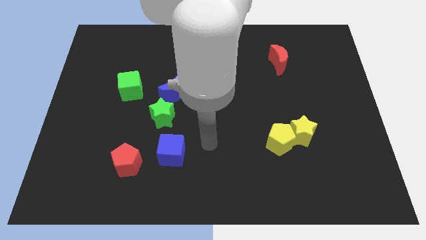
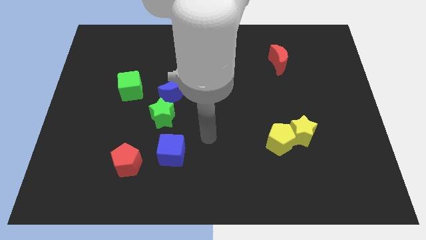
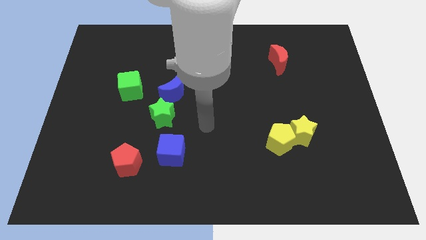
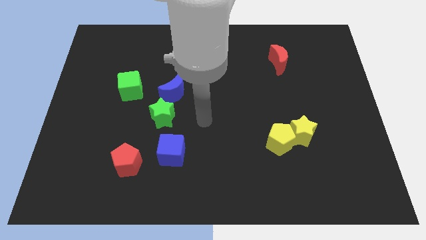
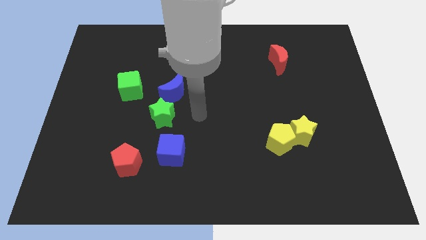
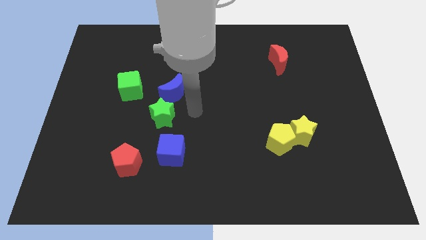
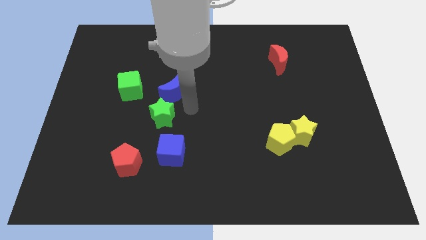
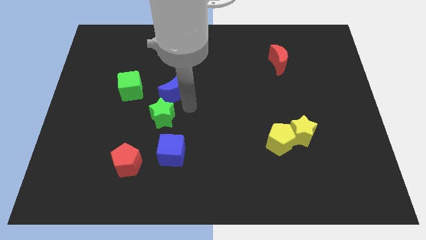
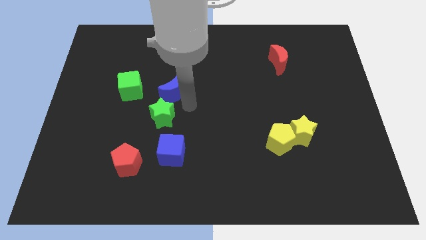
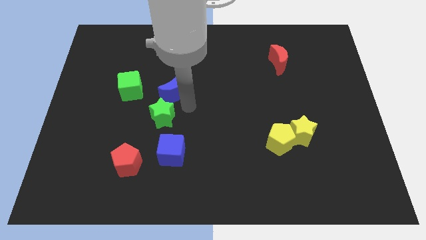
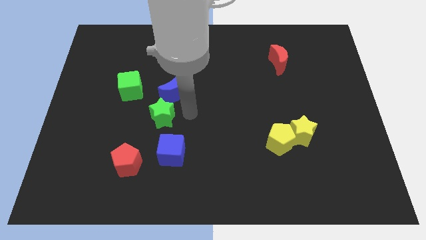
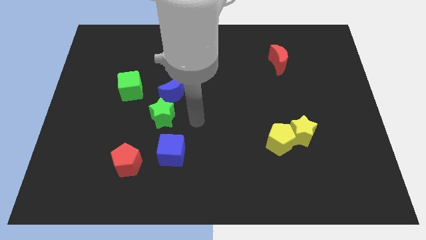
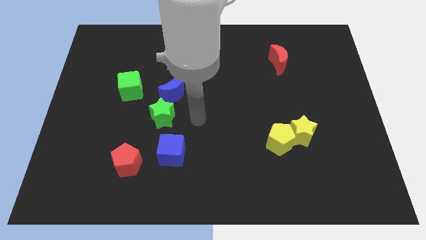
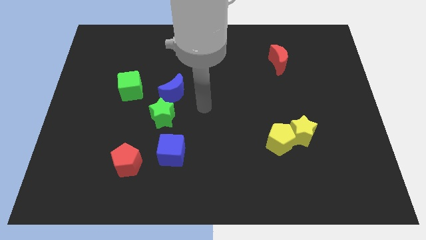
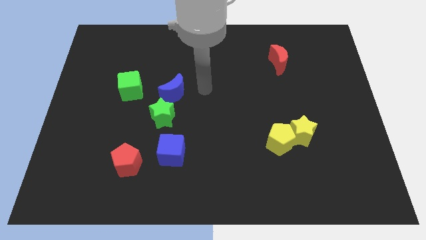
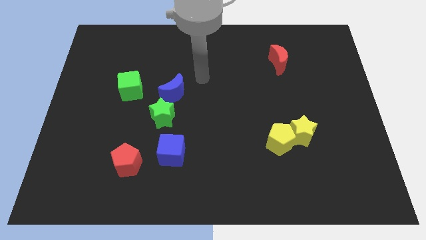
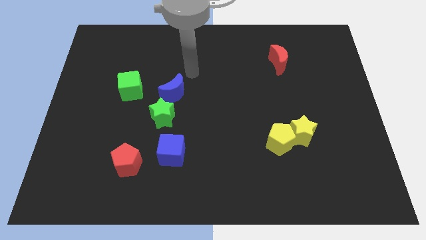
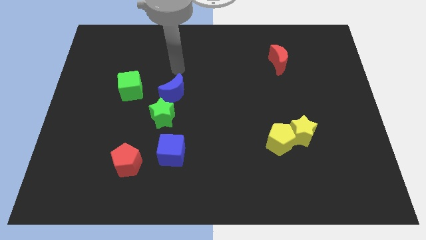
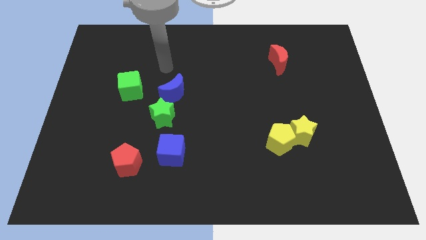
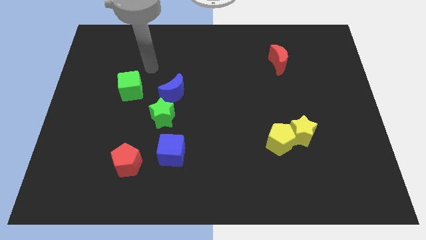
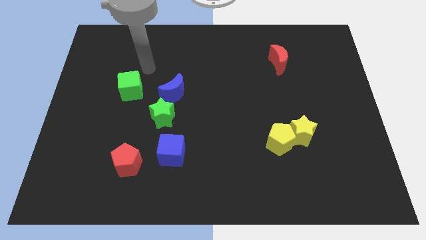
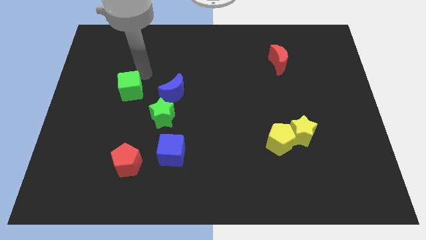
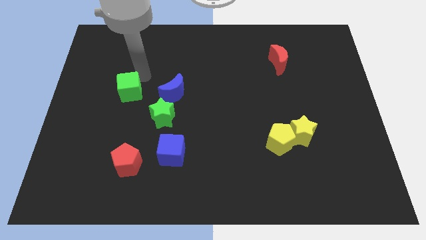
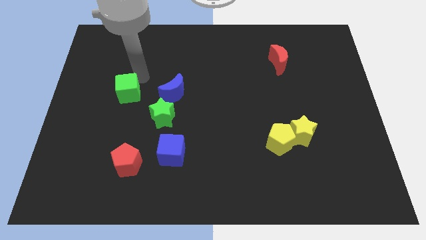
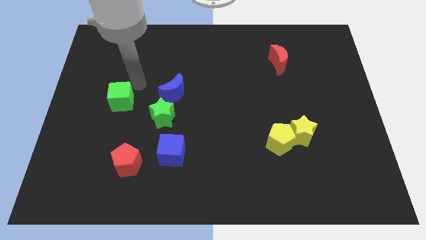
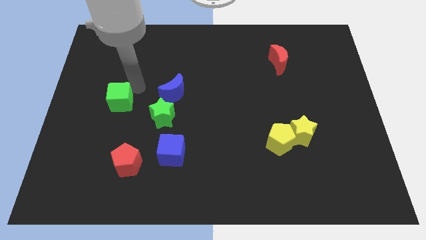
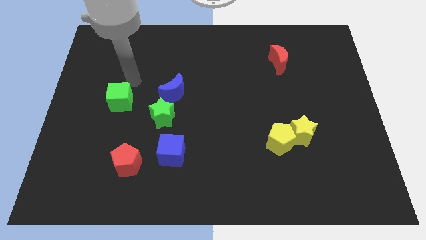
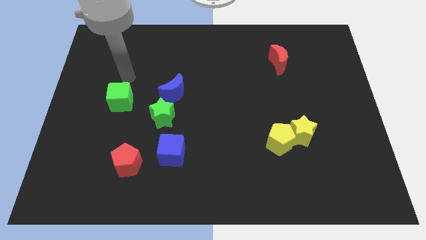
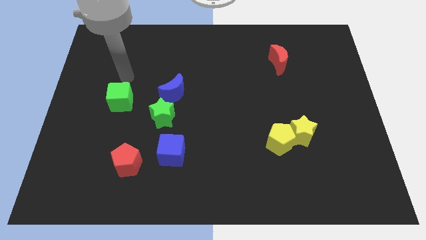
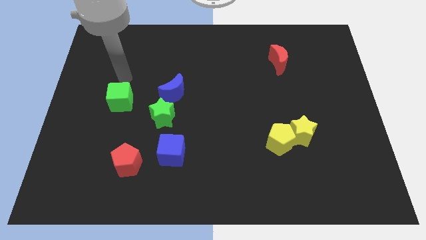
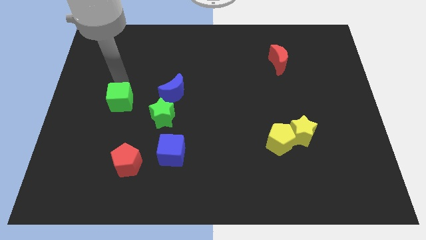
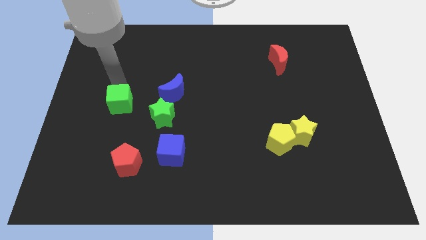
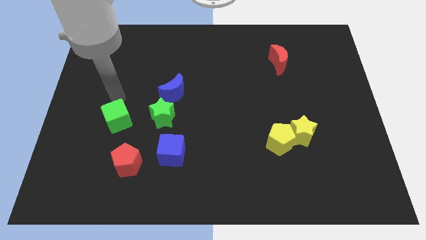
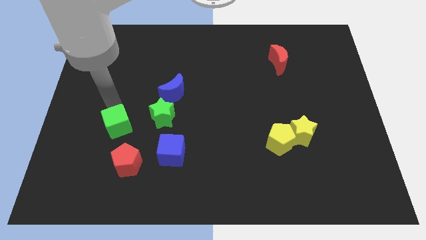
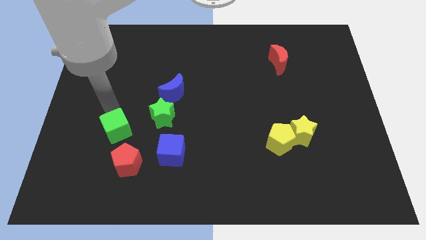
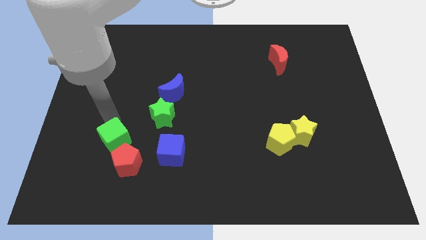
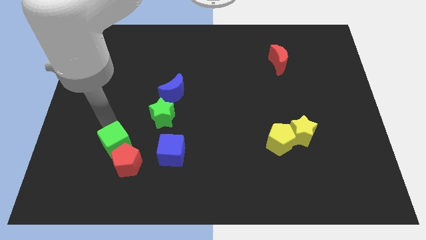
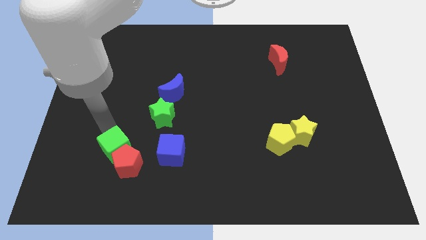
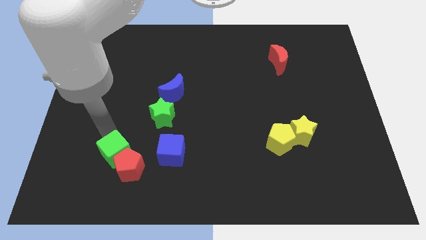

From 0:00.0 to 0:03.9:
move the green cube next to the red pentagon

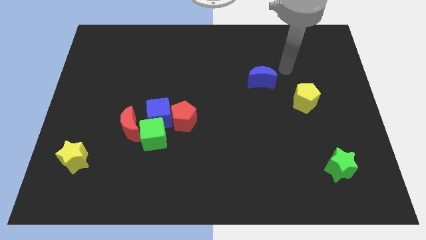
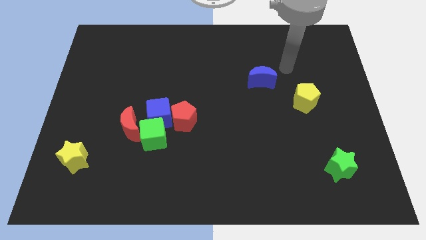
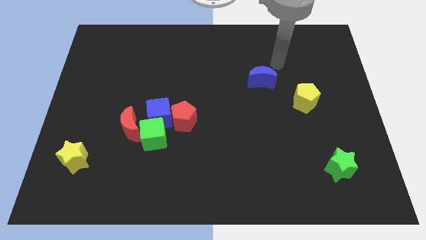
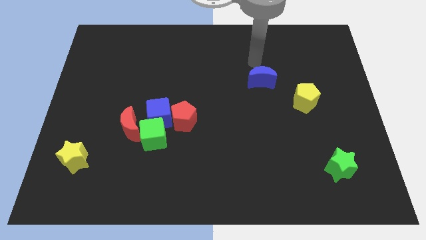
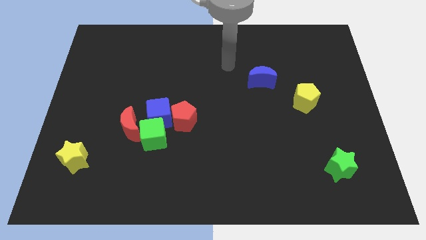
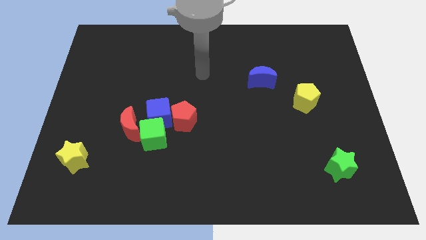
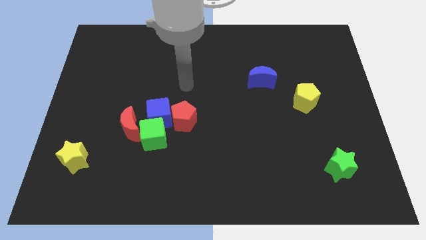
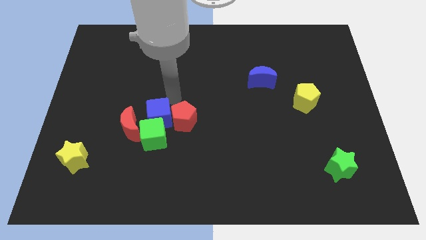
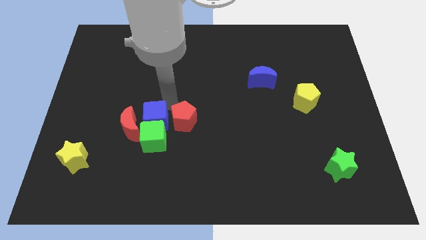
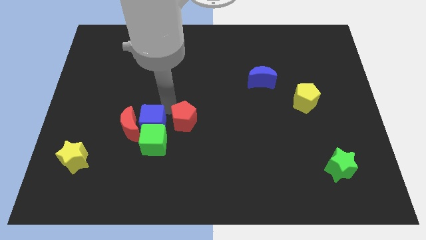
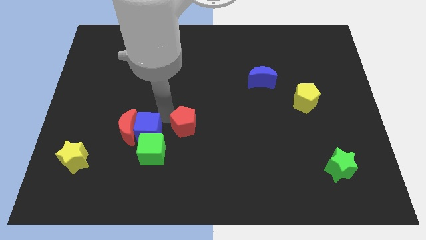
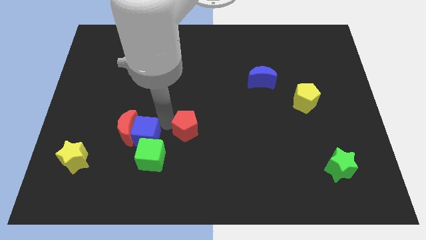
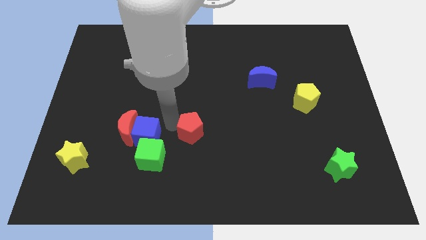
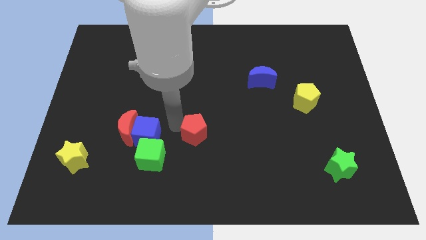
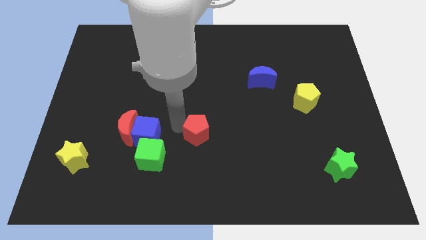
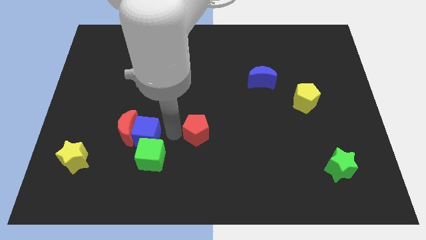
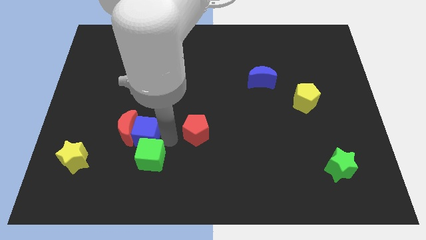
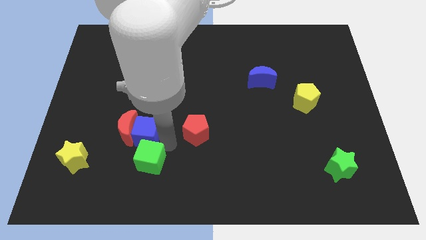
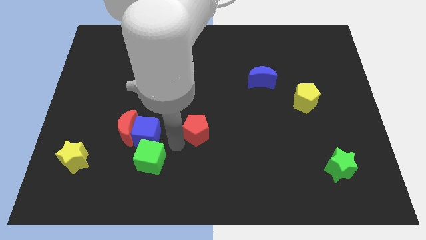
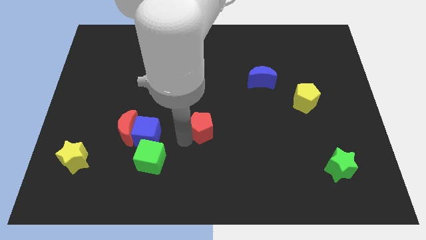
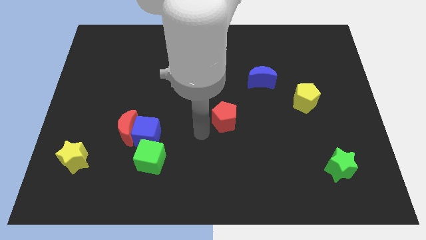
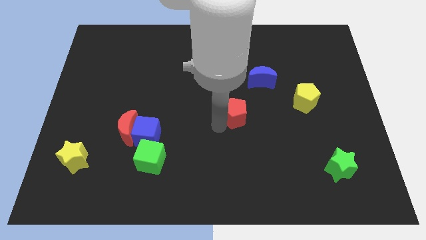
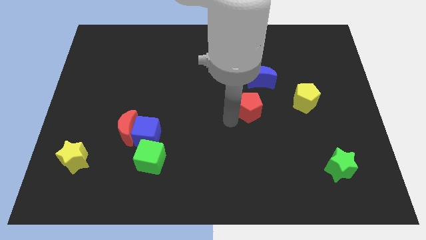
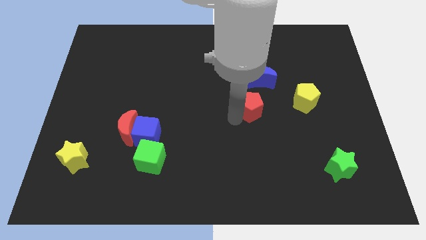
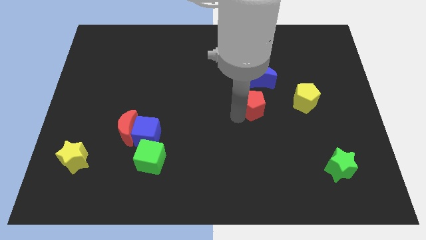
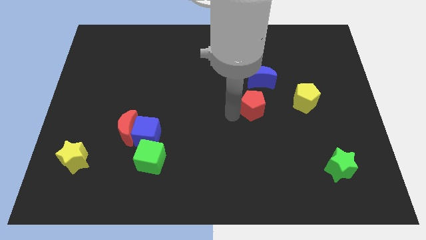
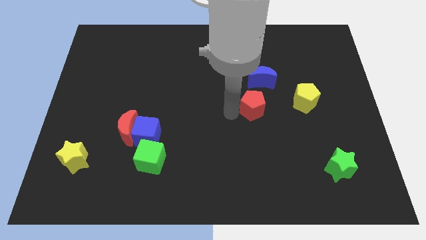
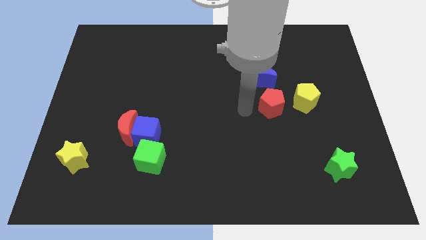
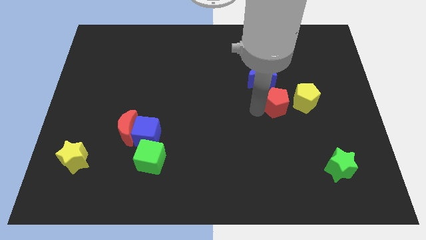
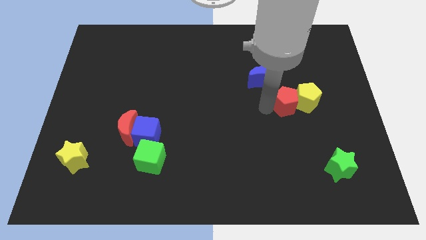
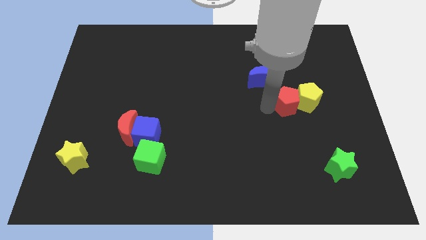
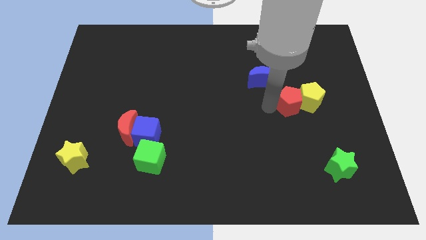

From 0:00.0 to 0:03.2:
slide the red pentagon towards the yellow pentagon

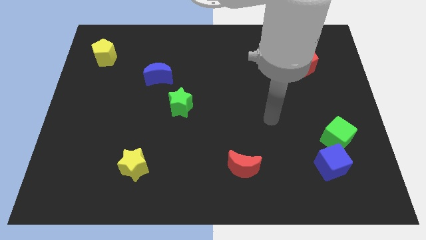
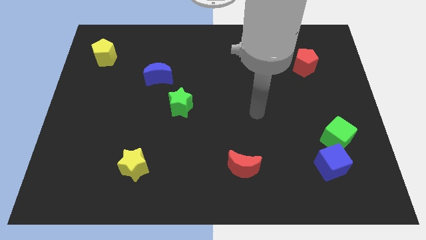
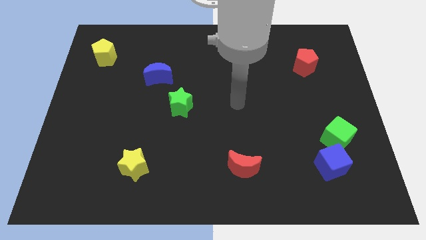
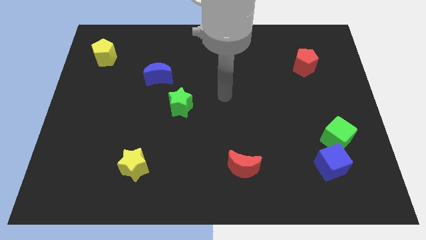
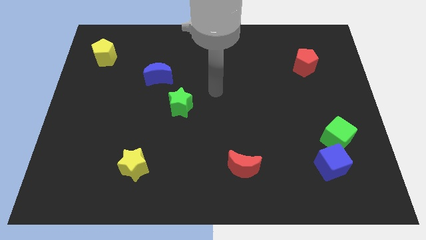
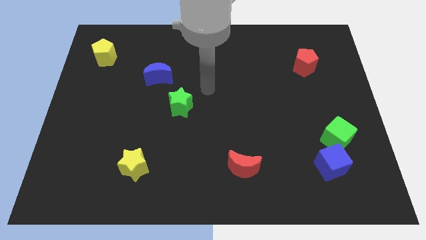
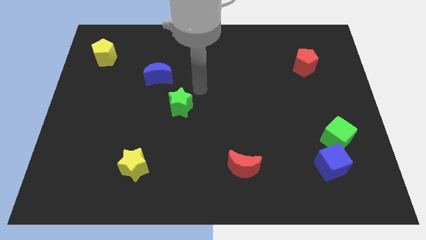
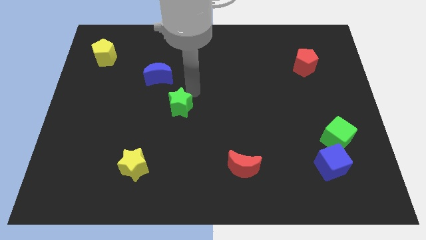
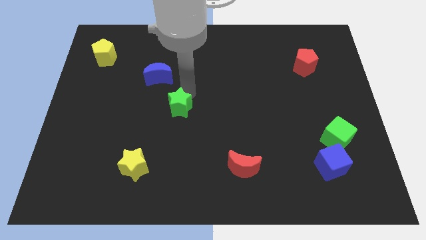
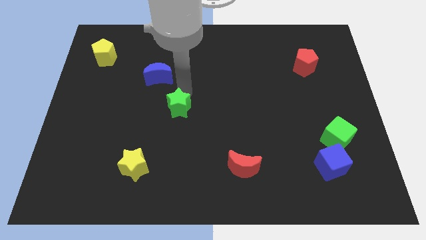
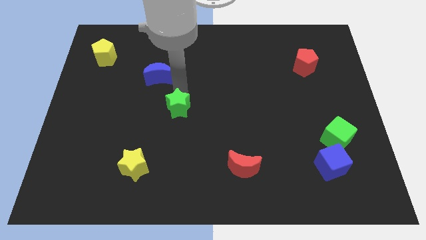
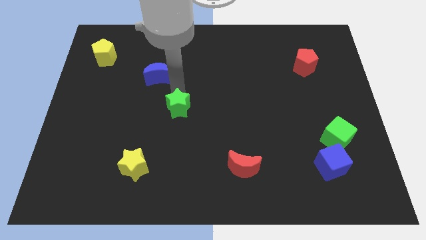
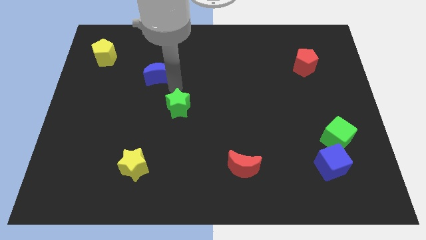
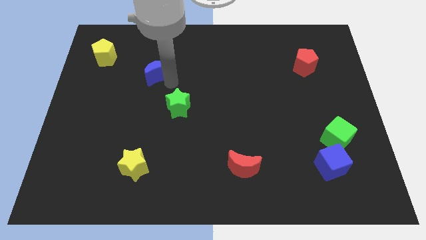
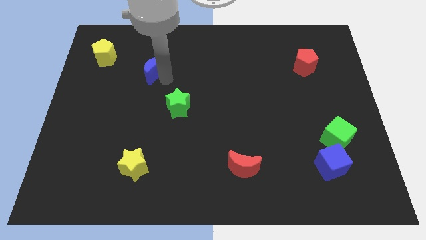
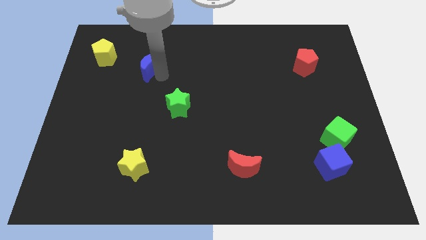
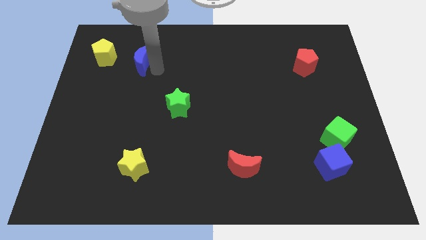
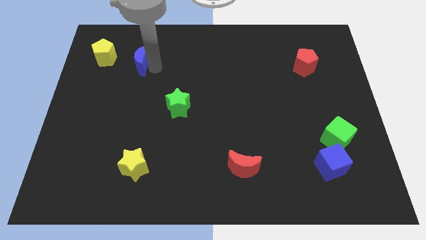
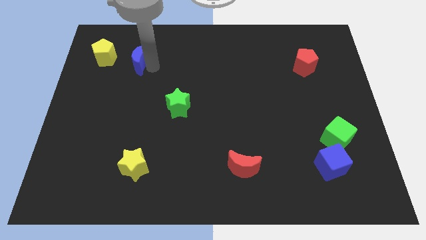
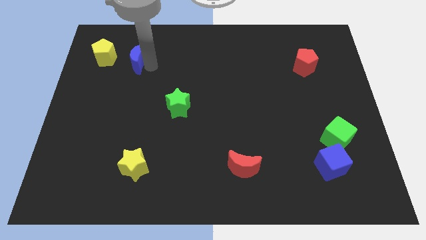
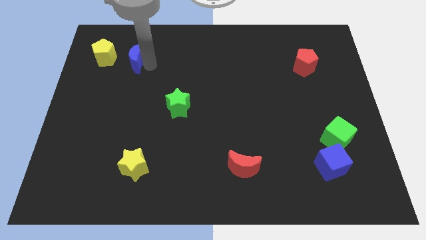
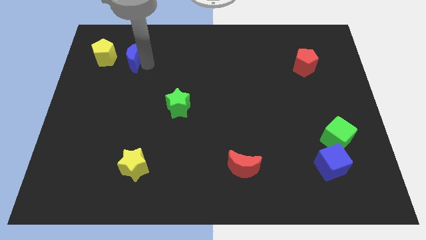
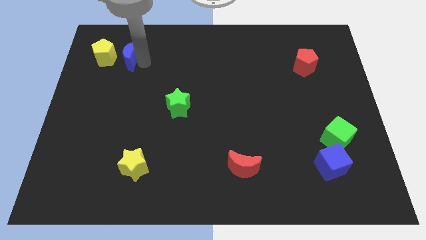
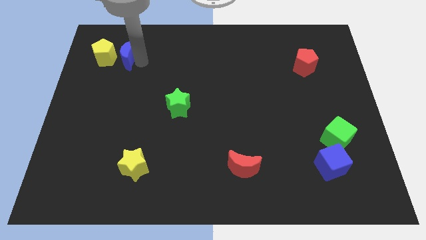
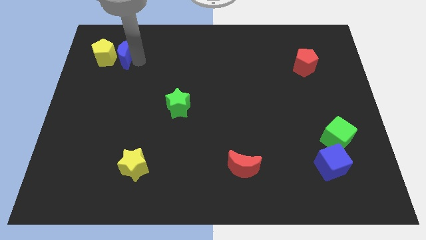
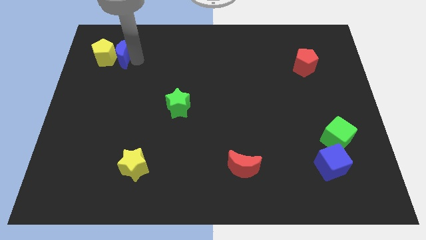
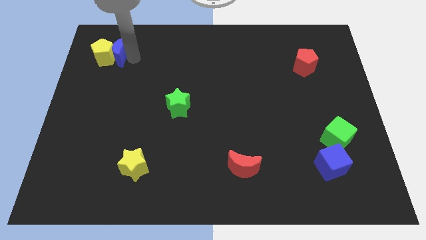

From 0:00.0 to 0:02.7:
move the blue moon next to the yellow pentagon
